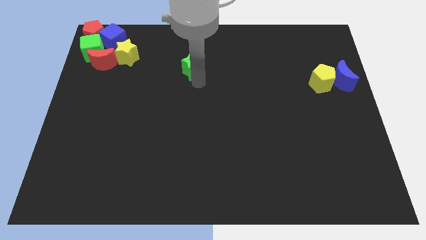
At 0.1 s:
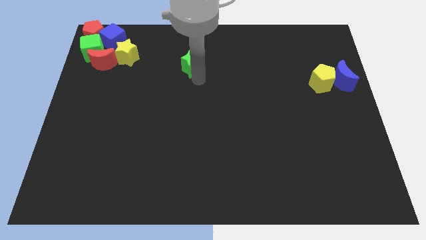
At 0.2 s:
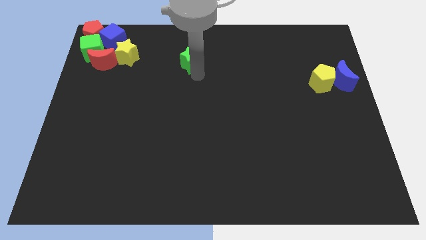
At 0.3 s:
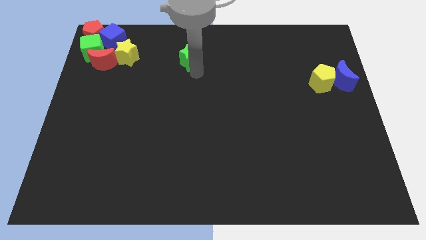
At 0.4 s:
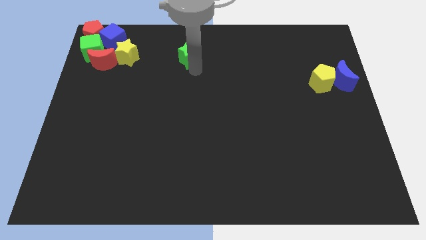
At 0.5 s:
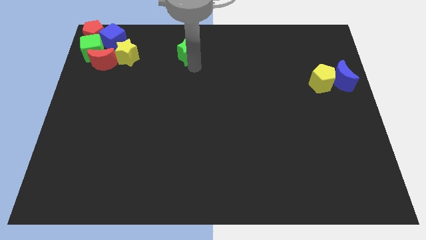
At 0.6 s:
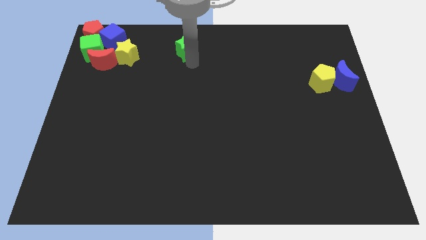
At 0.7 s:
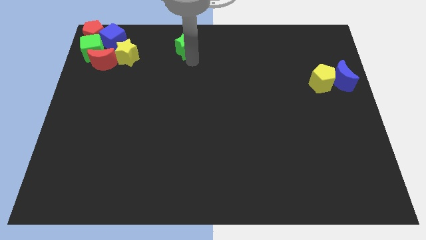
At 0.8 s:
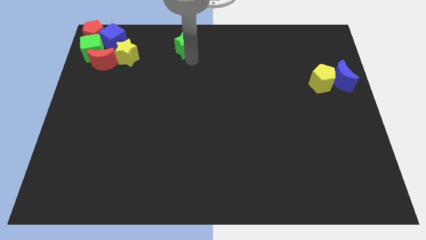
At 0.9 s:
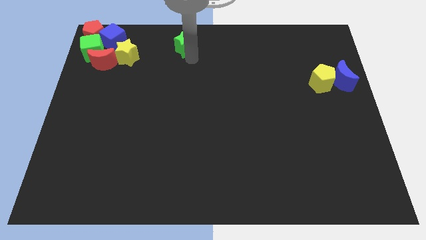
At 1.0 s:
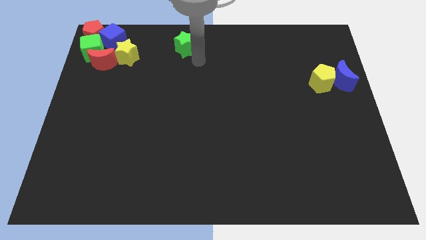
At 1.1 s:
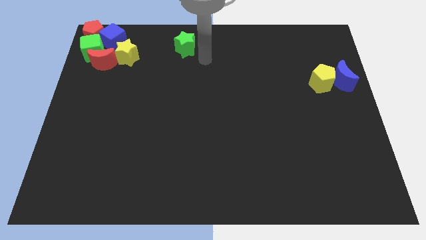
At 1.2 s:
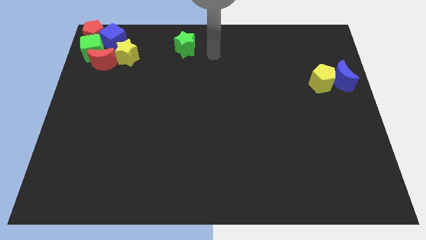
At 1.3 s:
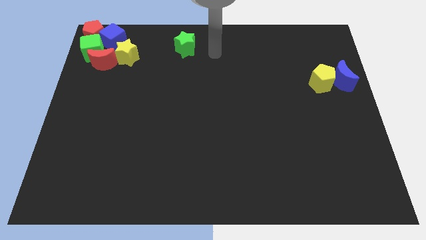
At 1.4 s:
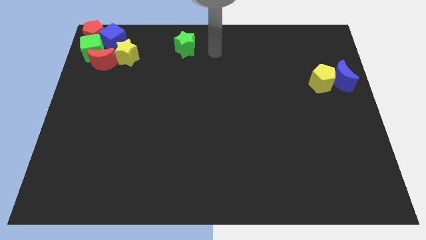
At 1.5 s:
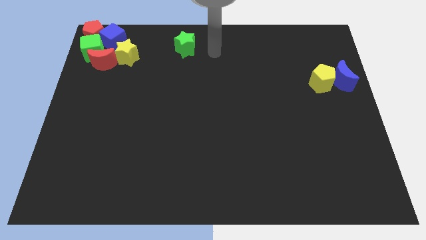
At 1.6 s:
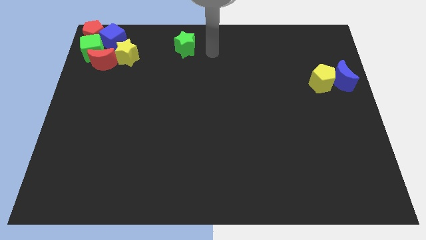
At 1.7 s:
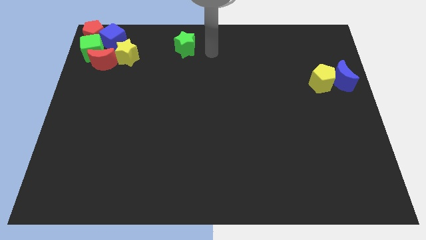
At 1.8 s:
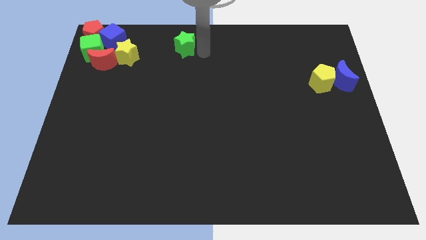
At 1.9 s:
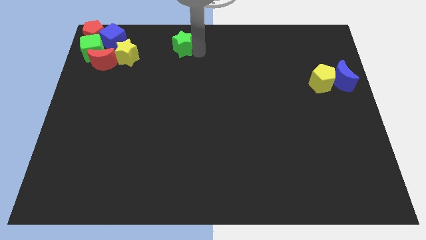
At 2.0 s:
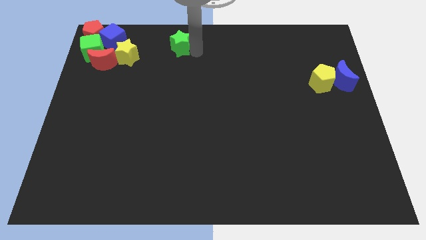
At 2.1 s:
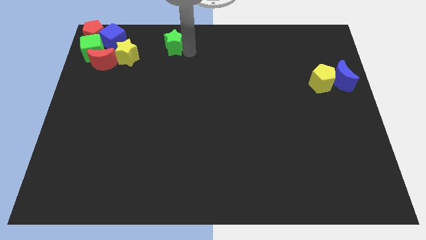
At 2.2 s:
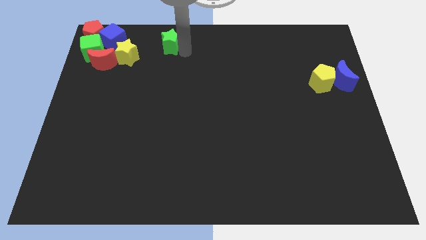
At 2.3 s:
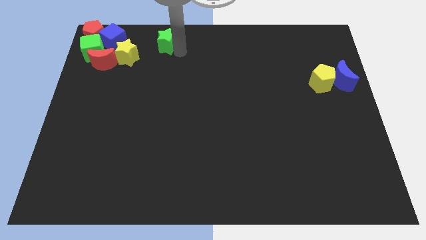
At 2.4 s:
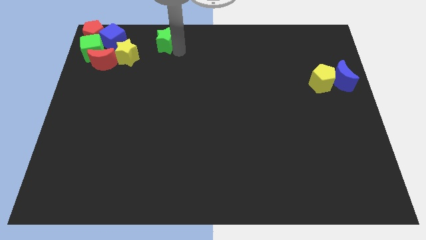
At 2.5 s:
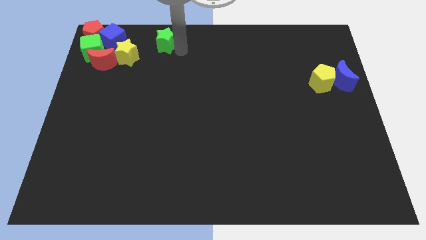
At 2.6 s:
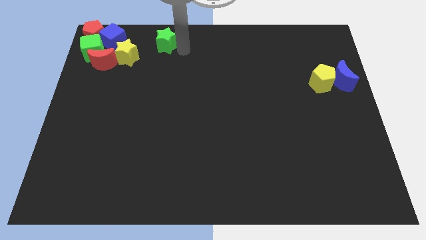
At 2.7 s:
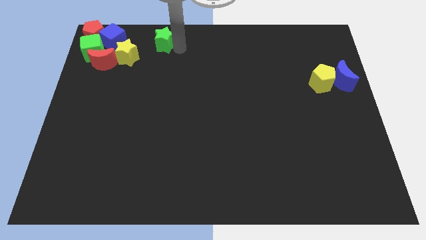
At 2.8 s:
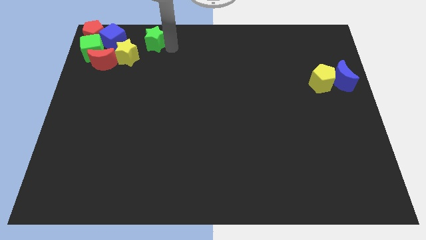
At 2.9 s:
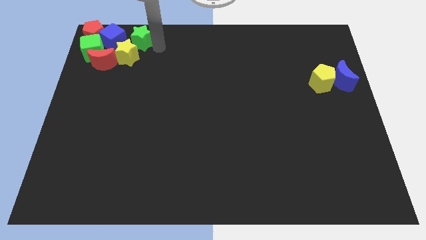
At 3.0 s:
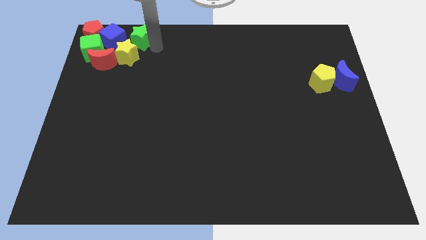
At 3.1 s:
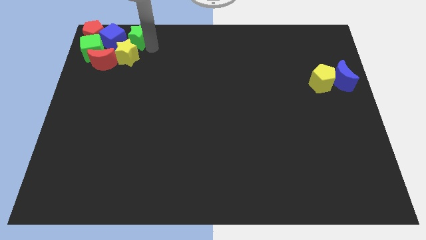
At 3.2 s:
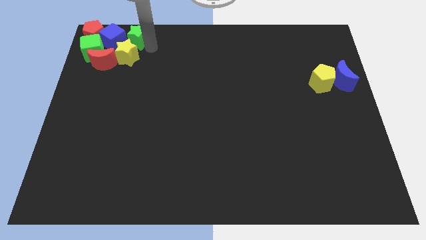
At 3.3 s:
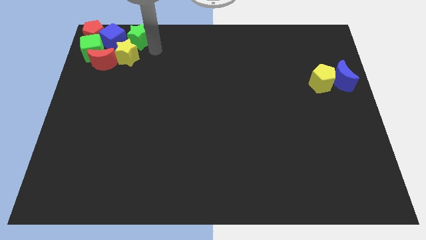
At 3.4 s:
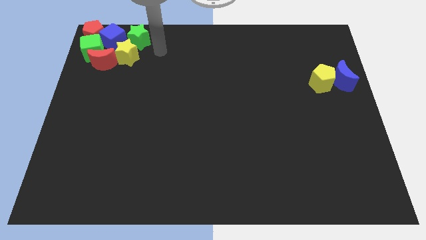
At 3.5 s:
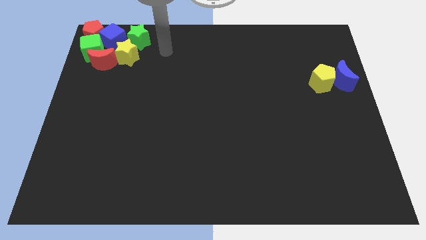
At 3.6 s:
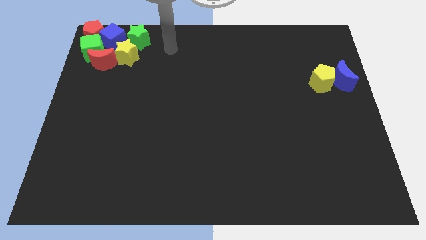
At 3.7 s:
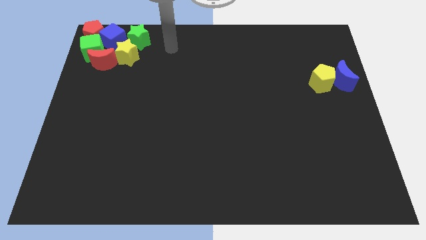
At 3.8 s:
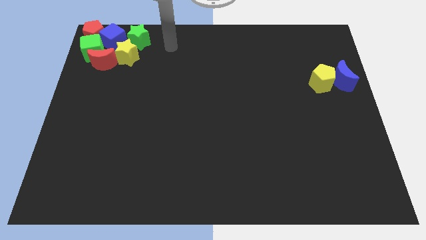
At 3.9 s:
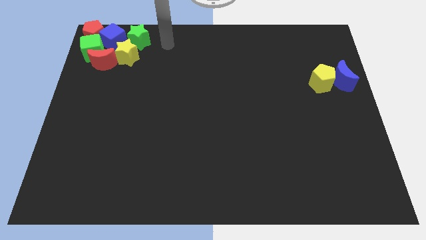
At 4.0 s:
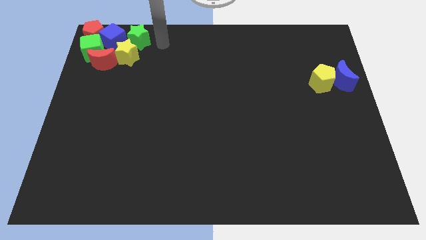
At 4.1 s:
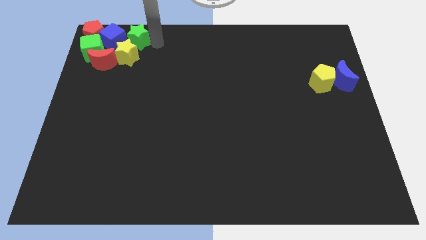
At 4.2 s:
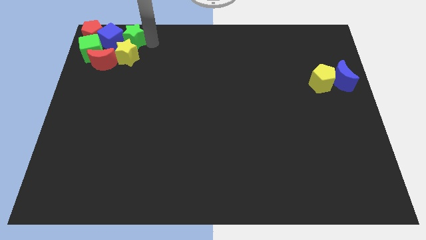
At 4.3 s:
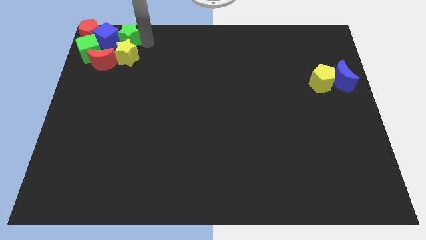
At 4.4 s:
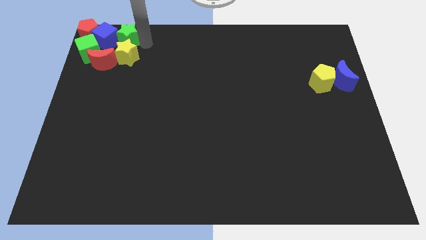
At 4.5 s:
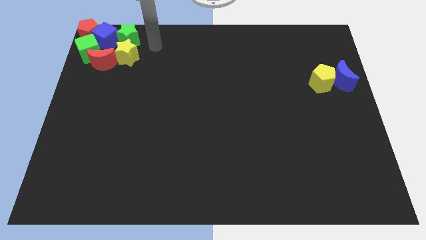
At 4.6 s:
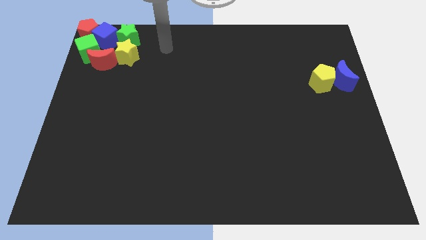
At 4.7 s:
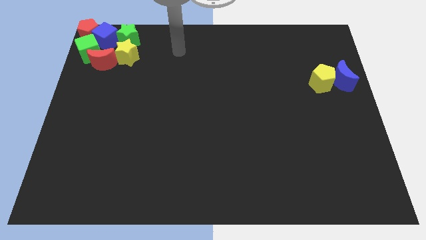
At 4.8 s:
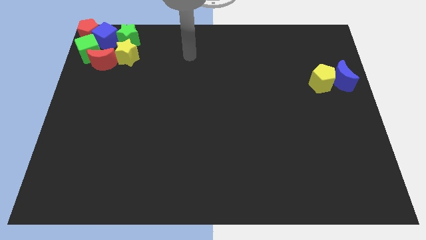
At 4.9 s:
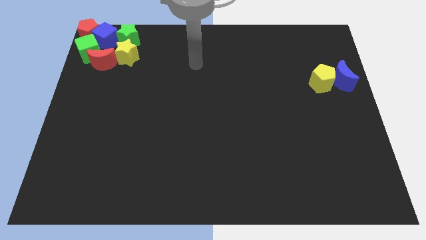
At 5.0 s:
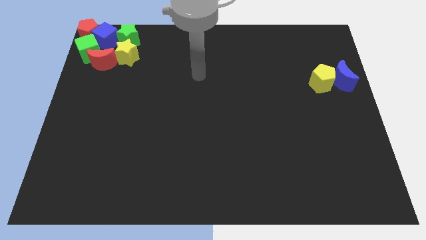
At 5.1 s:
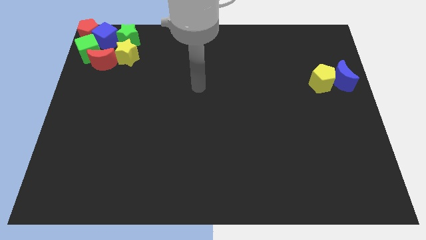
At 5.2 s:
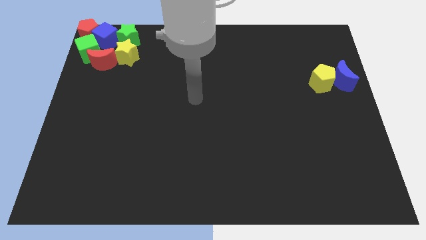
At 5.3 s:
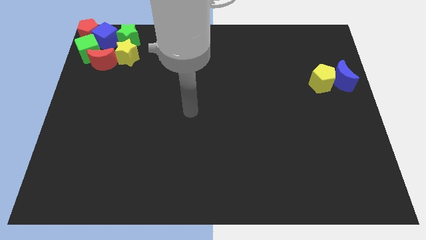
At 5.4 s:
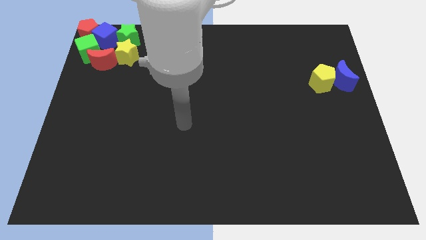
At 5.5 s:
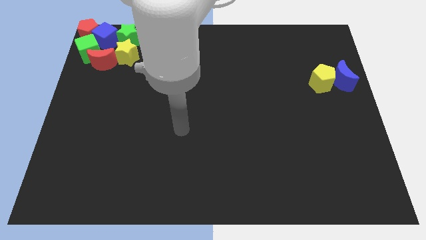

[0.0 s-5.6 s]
push the green star in to blue cube

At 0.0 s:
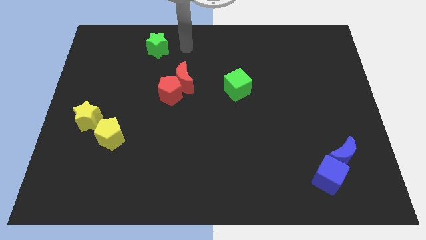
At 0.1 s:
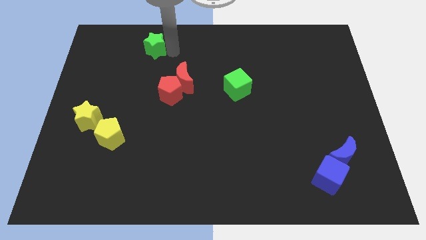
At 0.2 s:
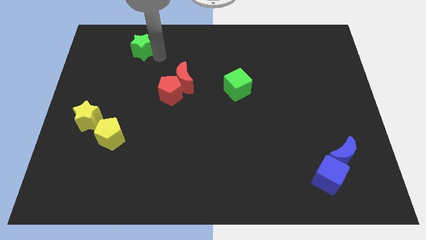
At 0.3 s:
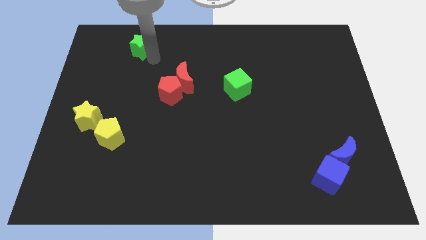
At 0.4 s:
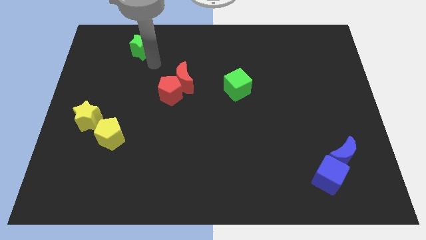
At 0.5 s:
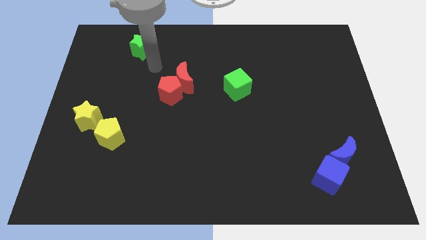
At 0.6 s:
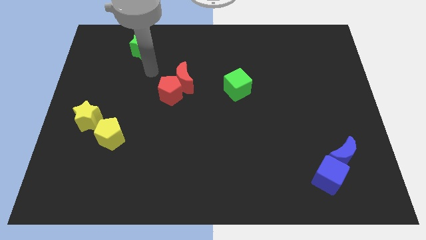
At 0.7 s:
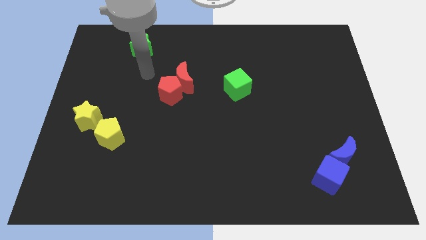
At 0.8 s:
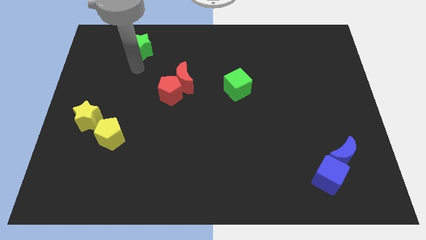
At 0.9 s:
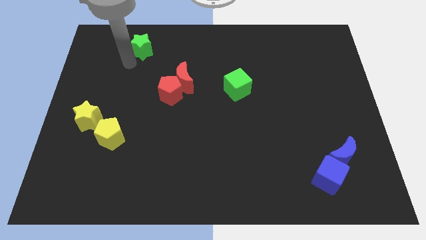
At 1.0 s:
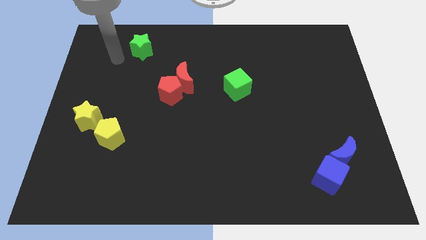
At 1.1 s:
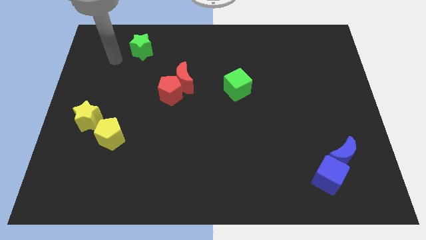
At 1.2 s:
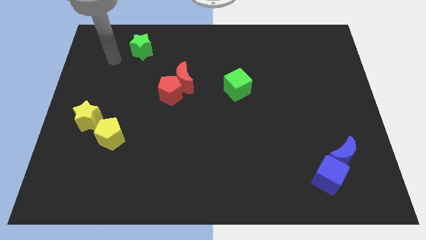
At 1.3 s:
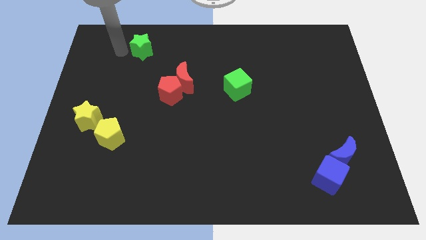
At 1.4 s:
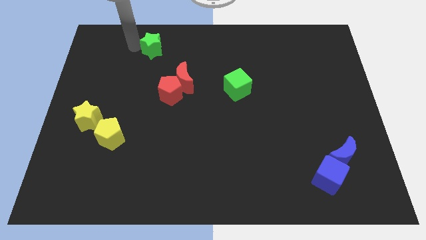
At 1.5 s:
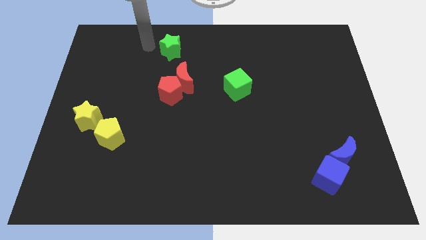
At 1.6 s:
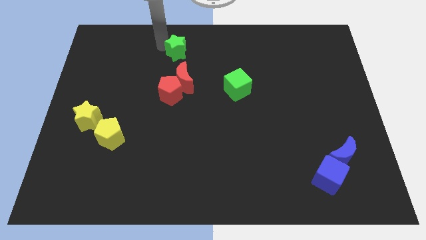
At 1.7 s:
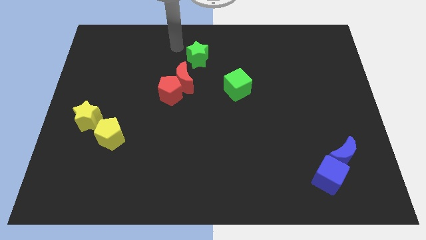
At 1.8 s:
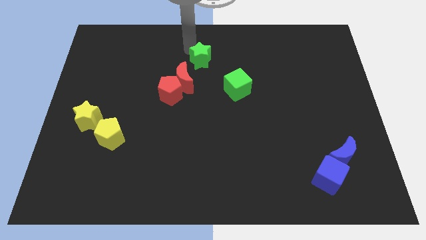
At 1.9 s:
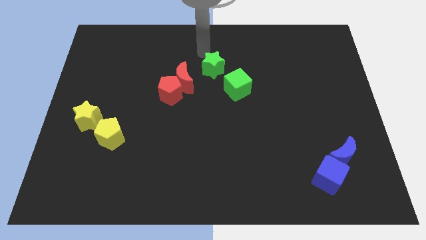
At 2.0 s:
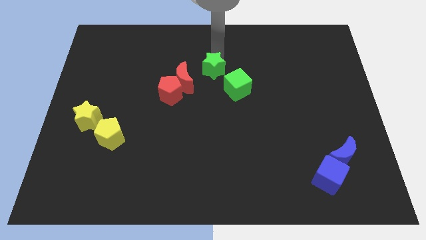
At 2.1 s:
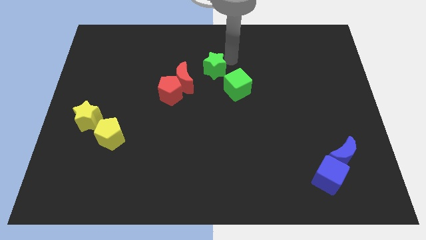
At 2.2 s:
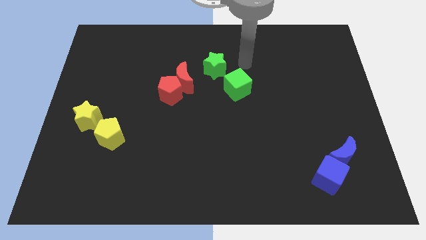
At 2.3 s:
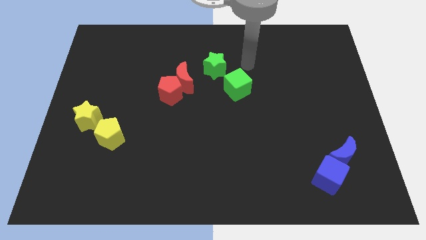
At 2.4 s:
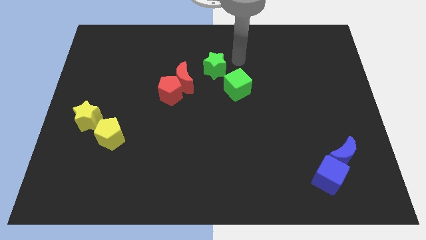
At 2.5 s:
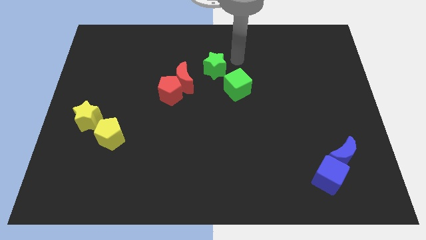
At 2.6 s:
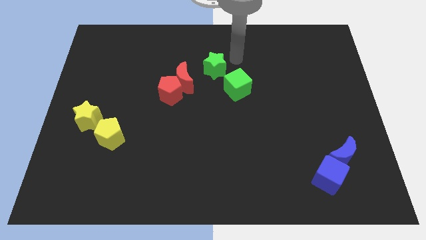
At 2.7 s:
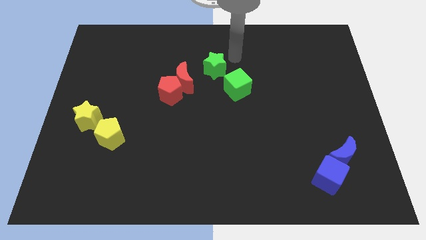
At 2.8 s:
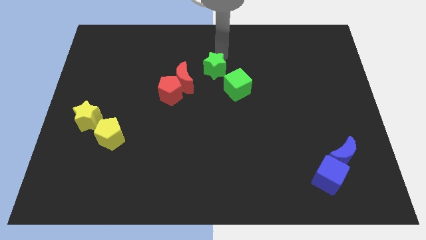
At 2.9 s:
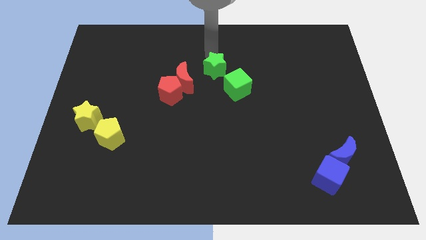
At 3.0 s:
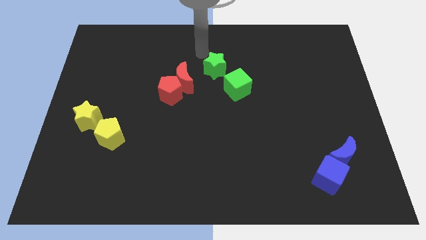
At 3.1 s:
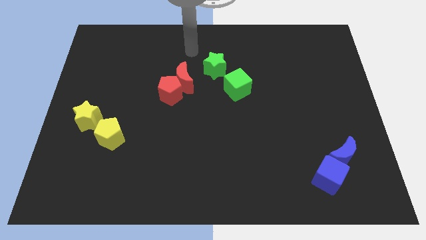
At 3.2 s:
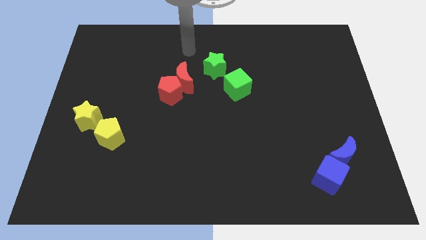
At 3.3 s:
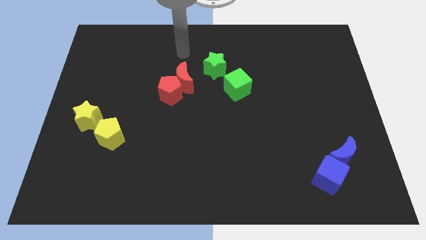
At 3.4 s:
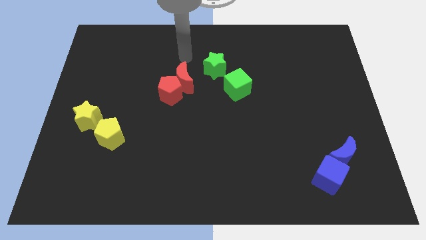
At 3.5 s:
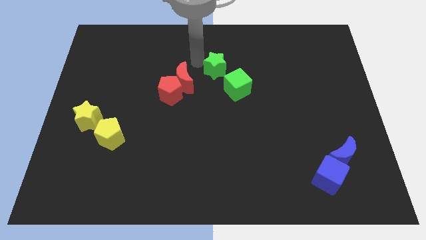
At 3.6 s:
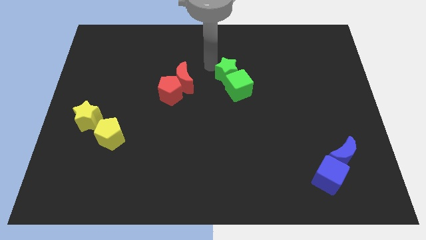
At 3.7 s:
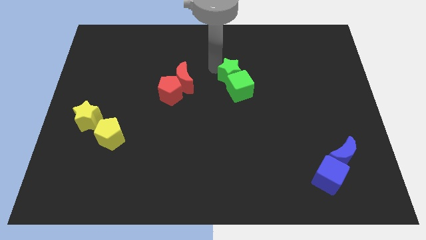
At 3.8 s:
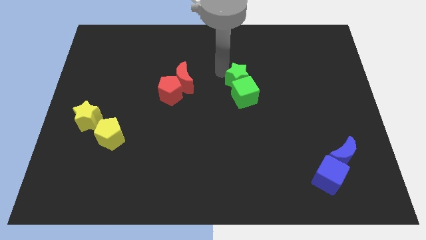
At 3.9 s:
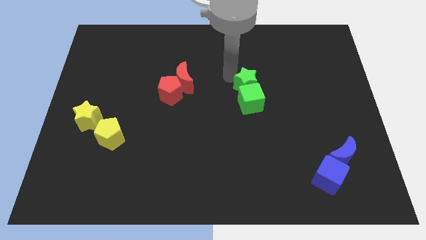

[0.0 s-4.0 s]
push the green star in to the green cube
